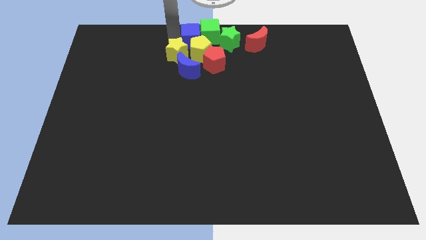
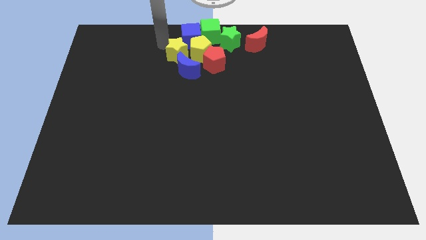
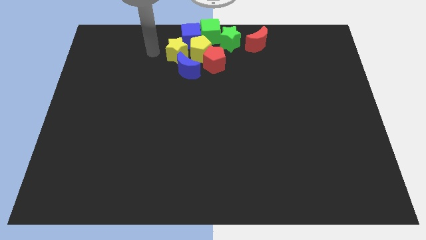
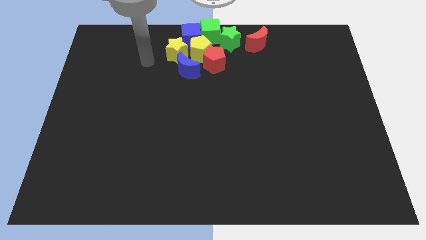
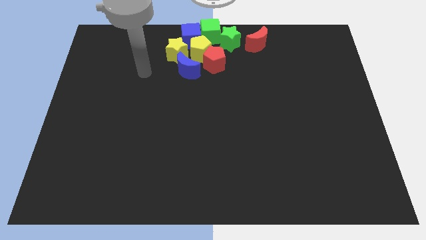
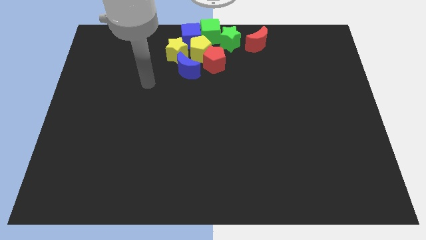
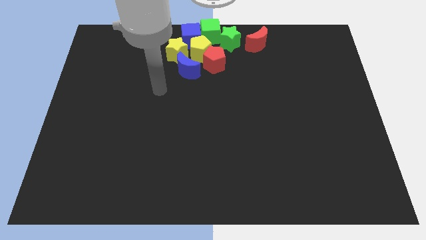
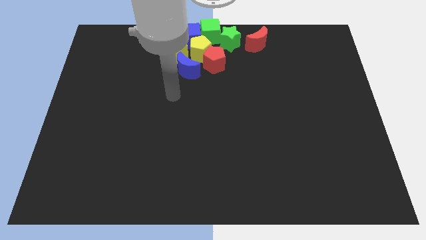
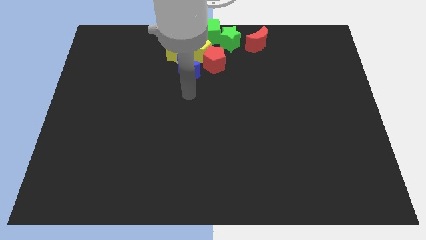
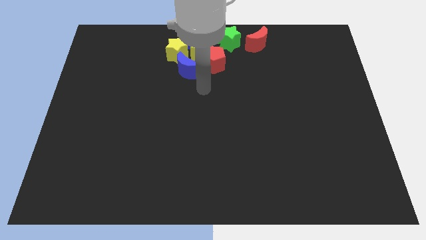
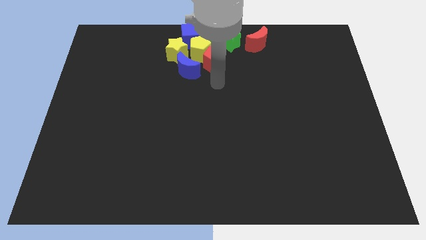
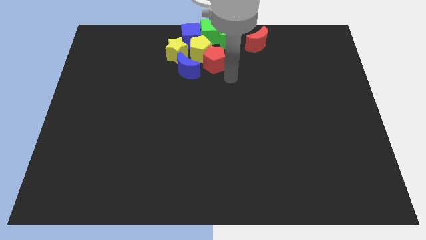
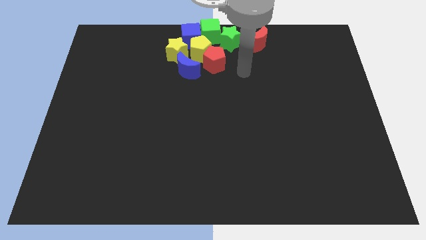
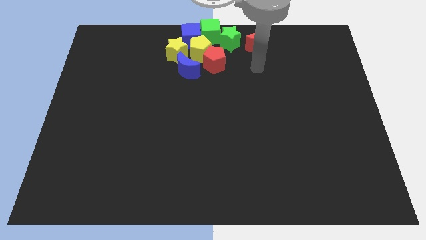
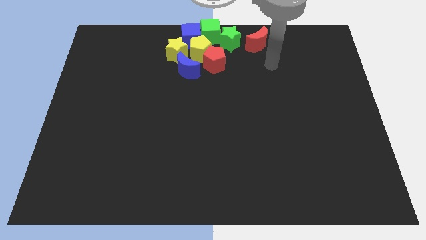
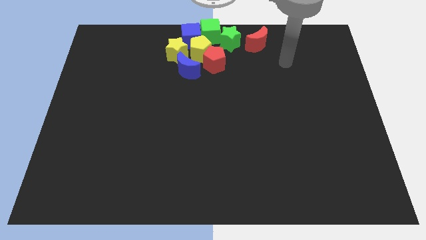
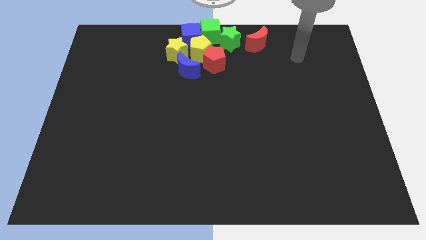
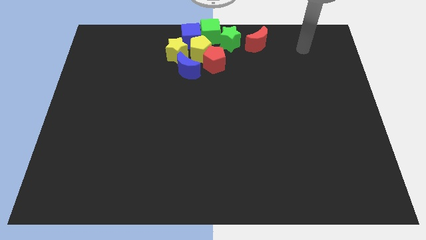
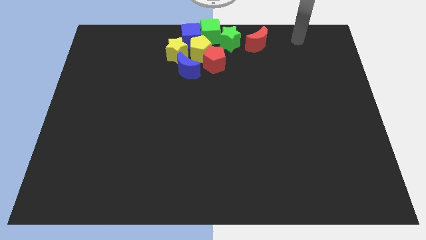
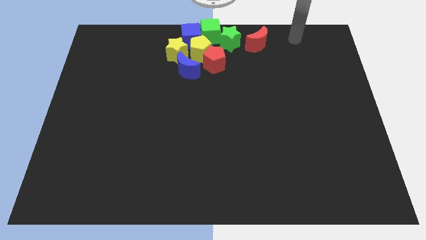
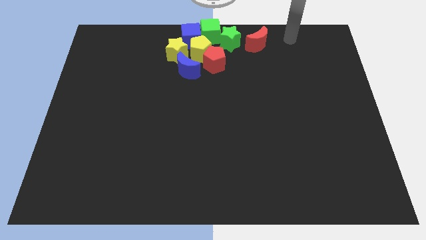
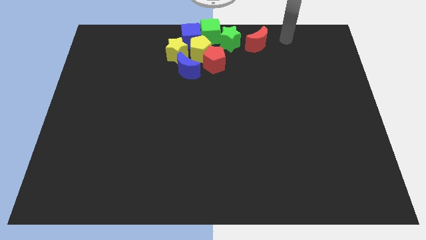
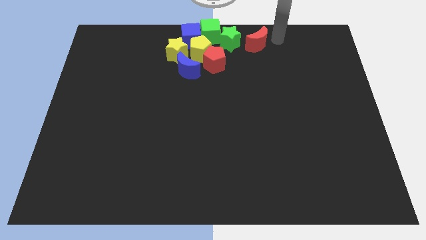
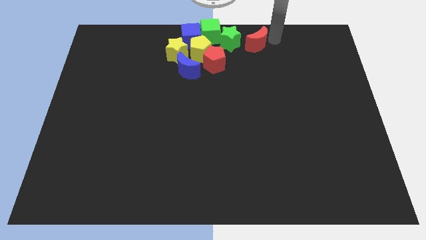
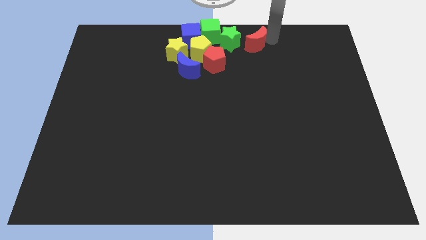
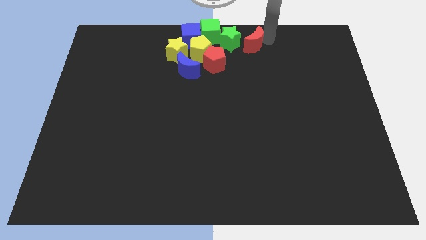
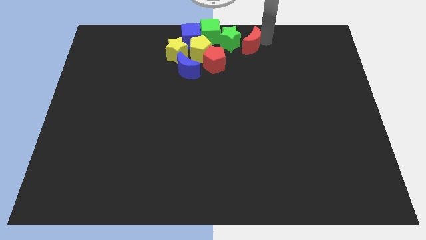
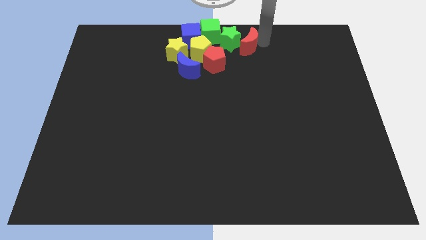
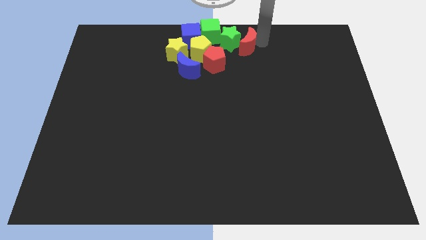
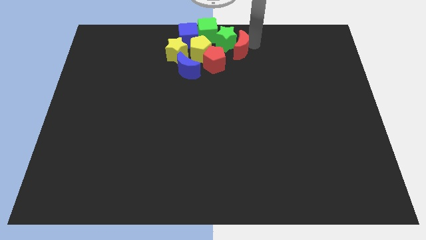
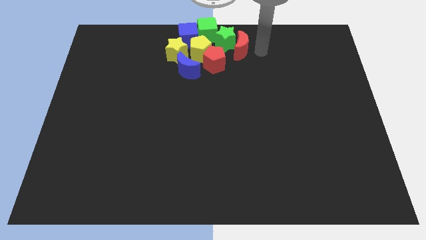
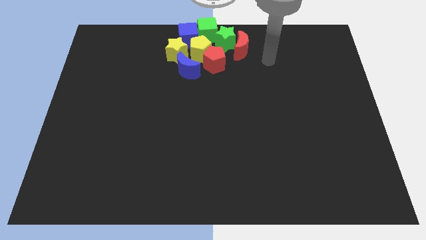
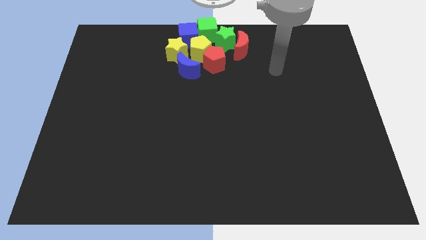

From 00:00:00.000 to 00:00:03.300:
move the red moon to the right side of the green star

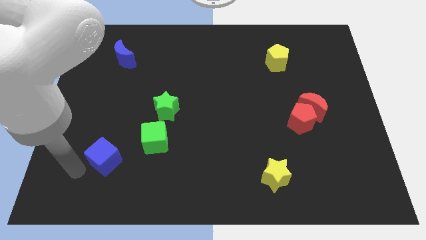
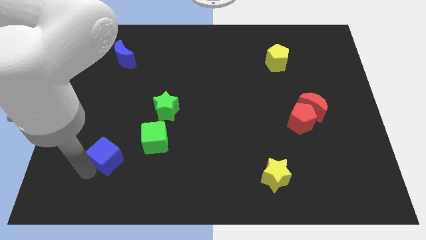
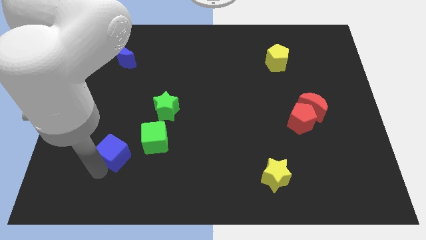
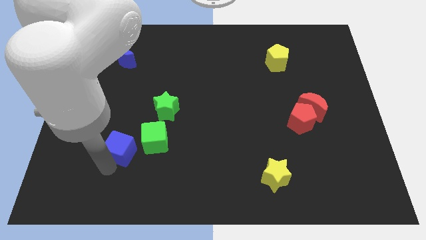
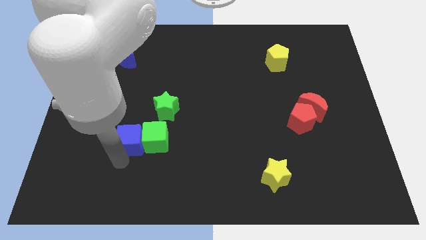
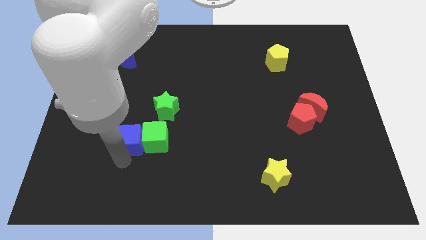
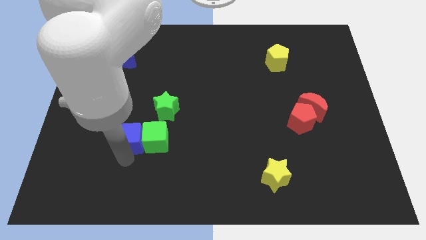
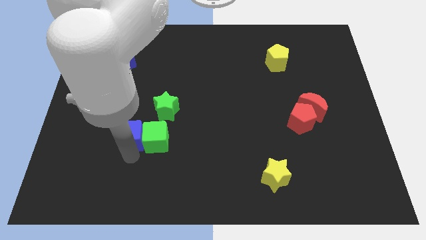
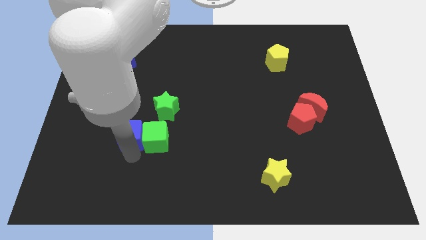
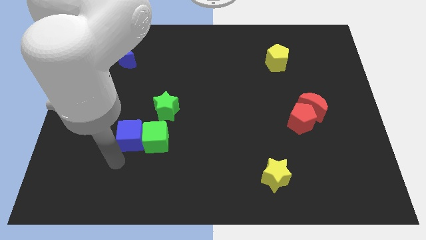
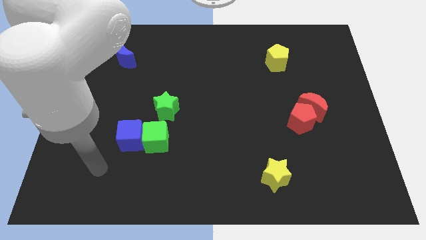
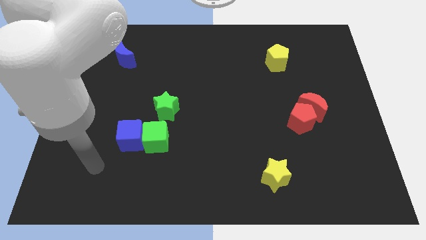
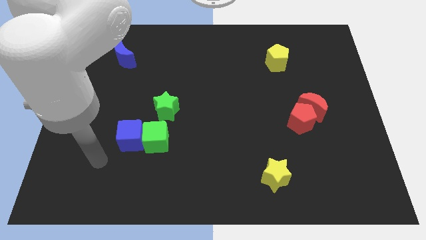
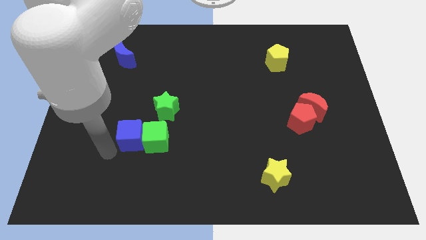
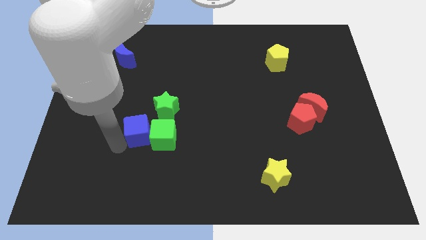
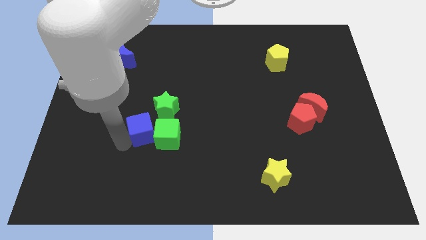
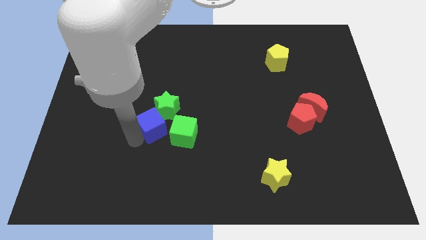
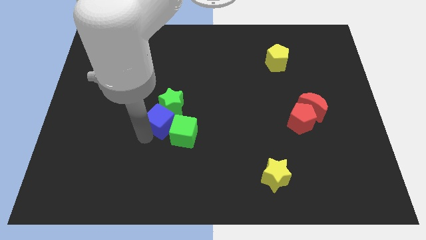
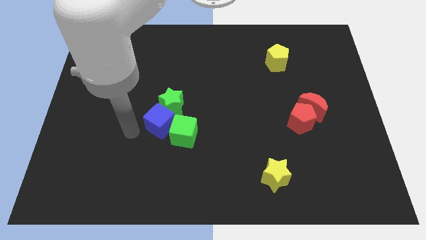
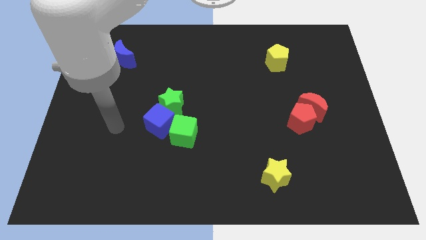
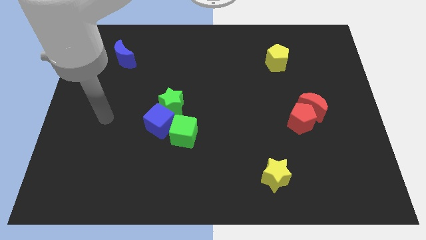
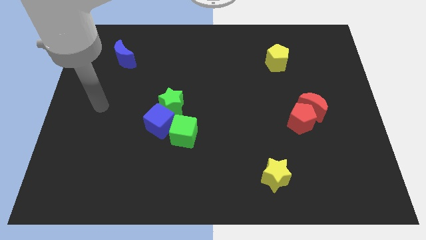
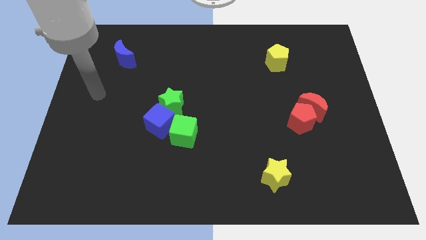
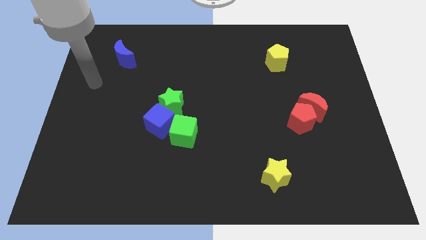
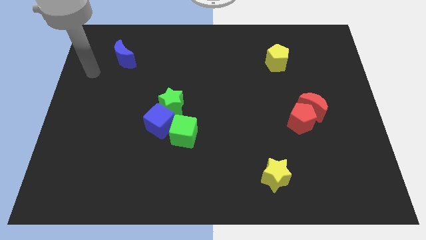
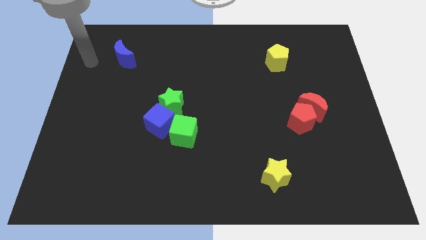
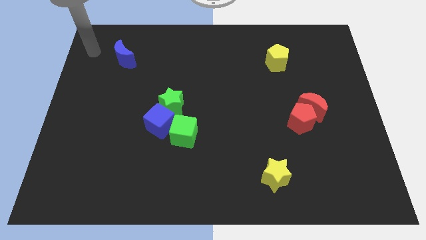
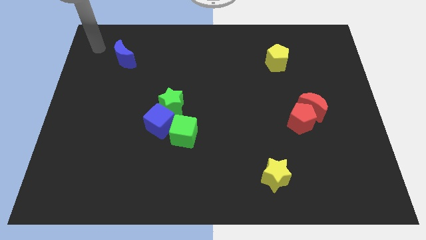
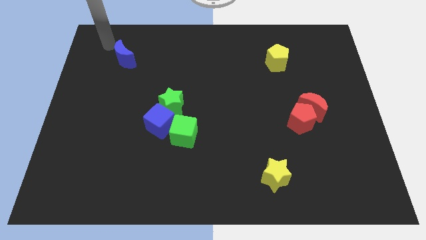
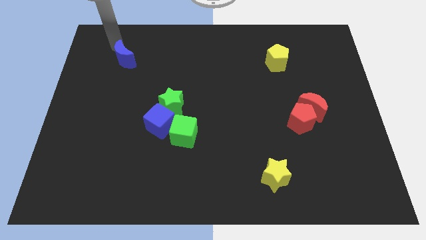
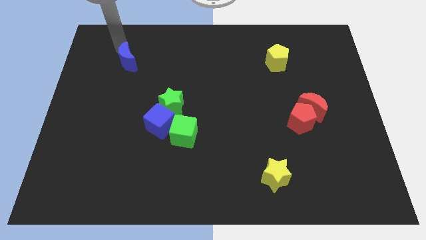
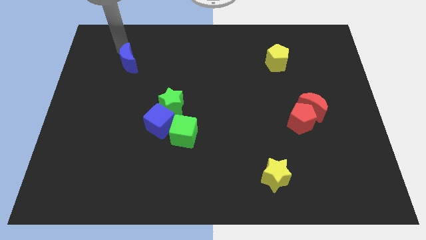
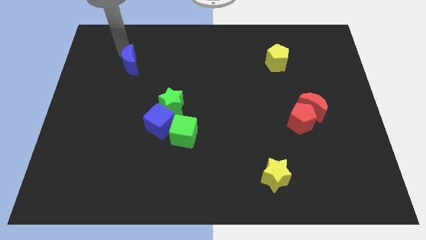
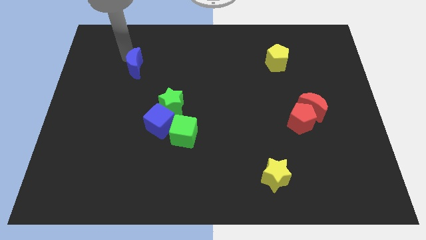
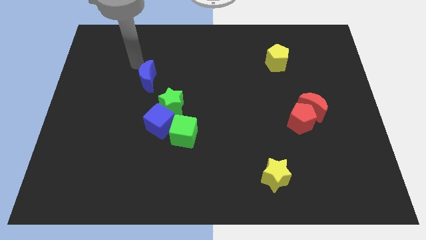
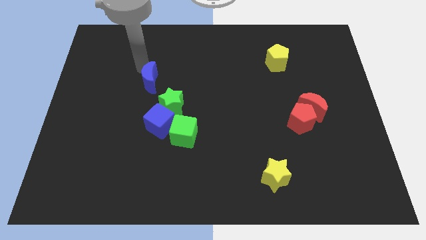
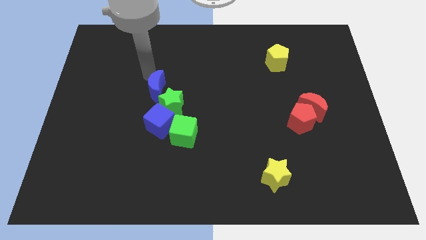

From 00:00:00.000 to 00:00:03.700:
put the blue cube into the green star

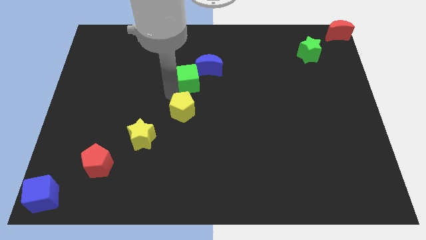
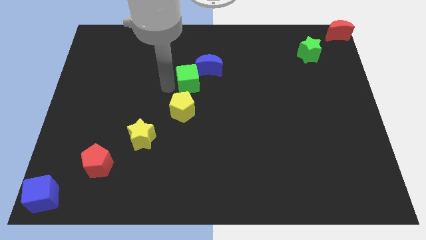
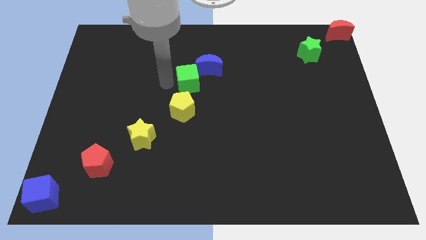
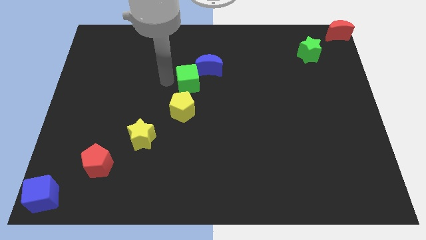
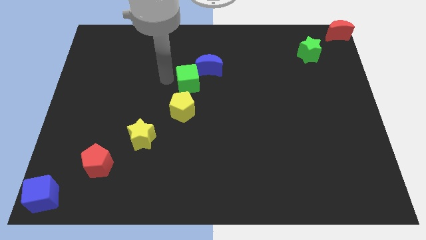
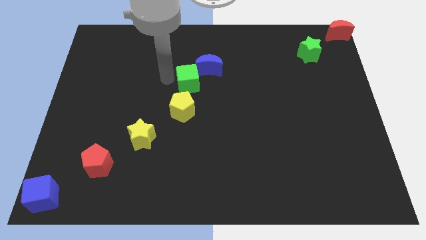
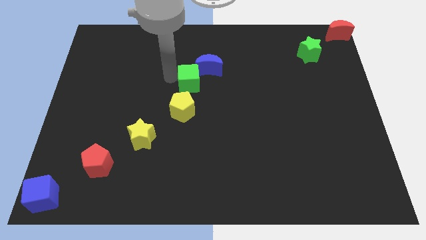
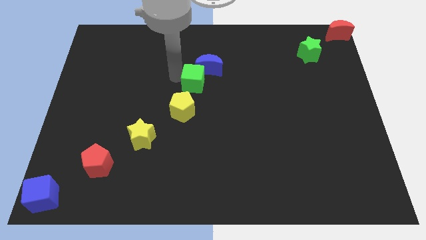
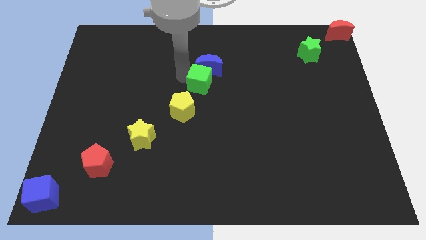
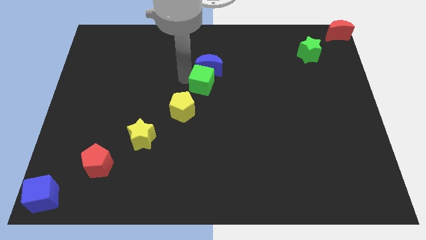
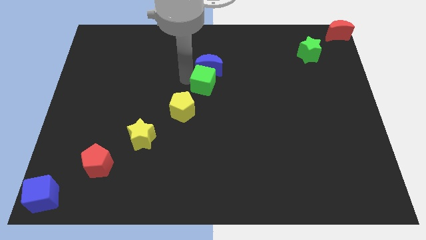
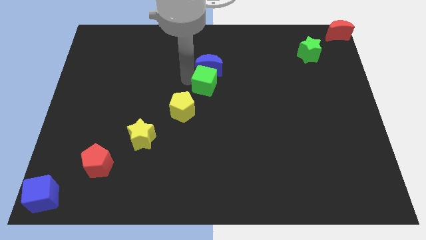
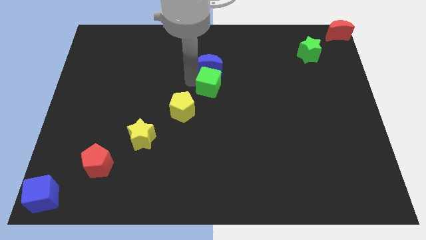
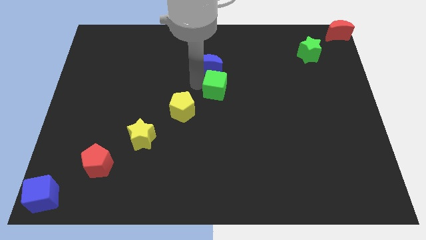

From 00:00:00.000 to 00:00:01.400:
push the green cube below the blue crescent

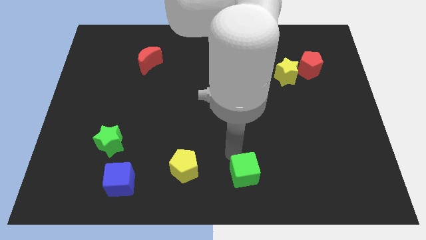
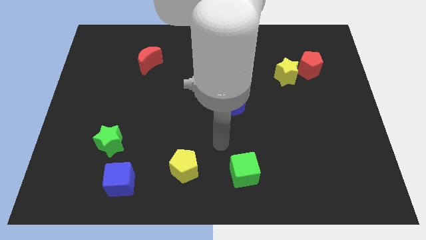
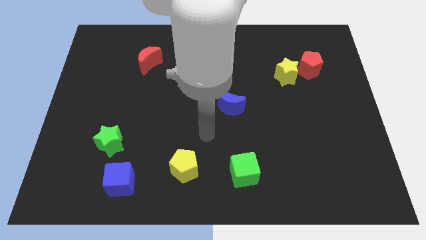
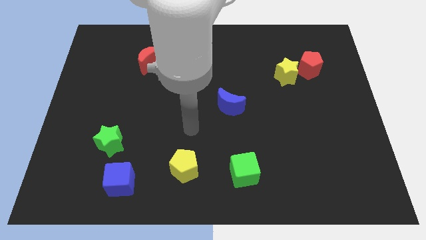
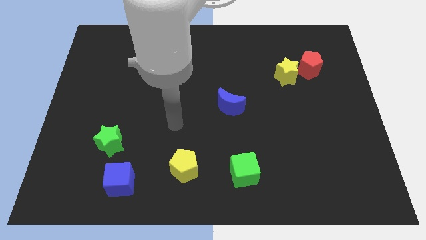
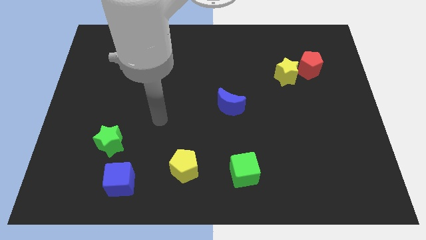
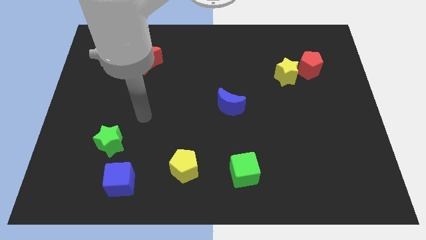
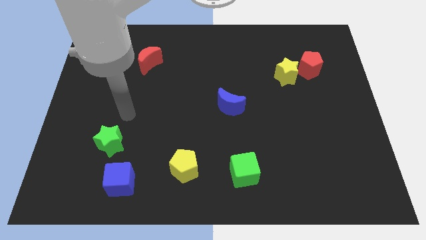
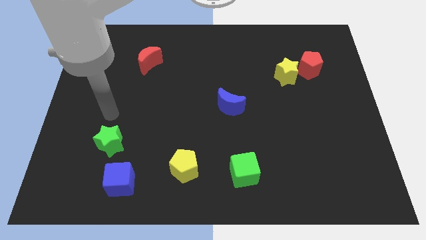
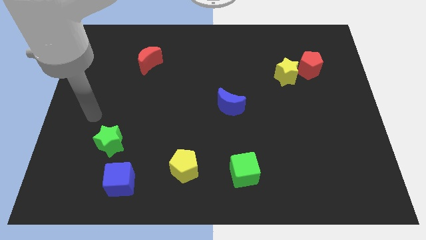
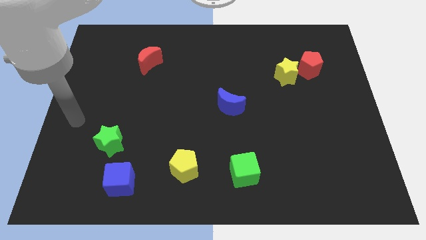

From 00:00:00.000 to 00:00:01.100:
move your hand away from green cube
